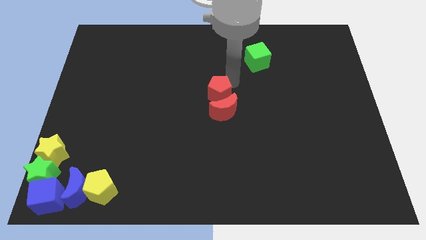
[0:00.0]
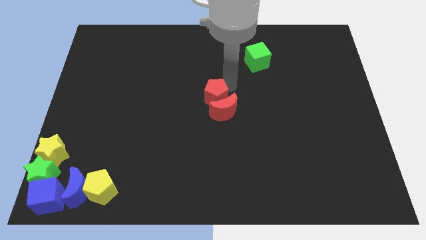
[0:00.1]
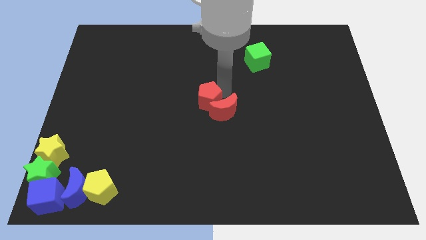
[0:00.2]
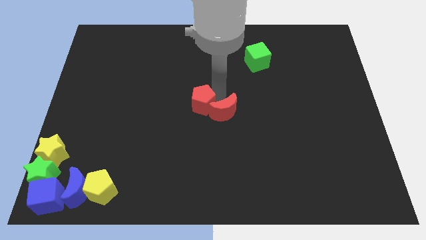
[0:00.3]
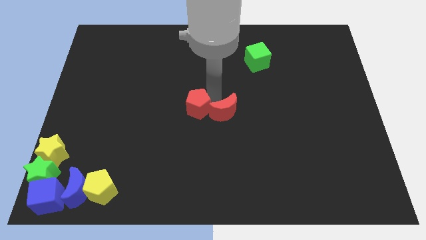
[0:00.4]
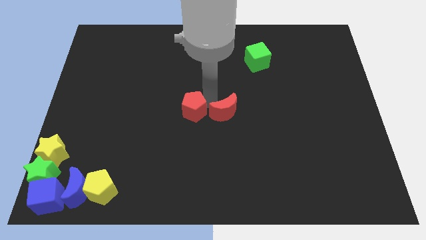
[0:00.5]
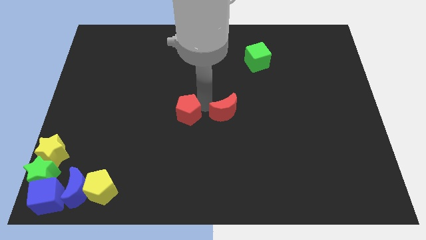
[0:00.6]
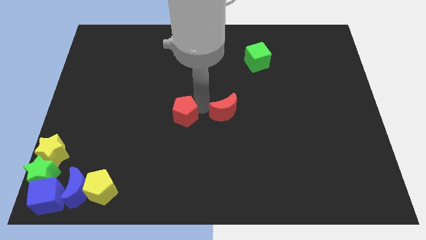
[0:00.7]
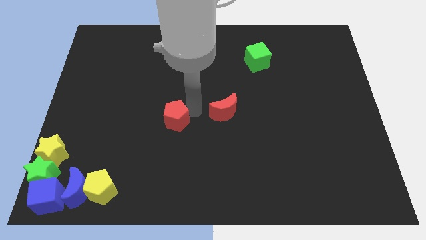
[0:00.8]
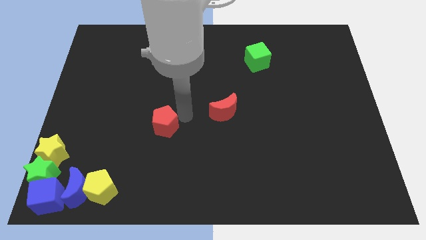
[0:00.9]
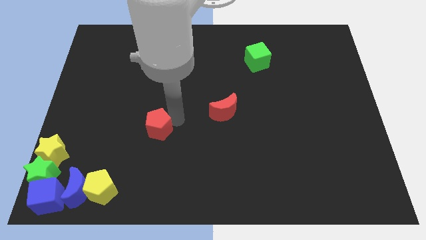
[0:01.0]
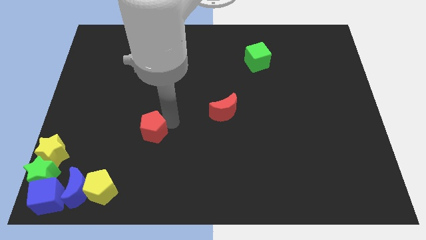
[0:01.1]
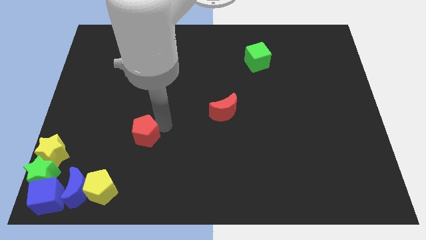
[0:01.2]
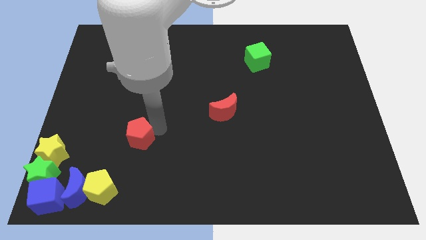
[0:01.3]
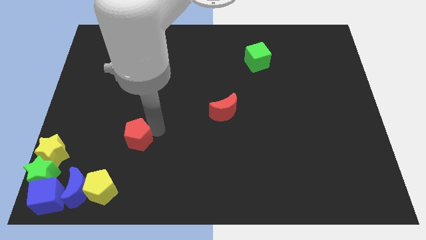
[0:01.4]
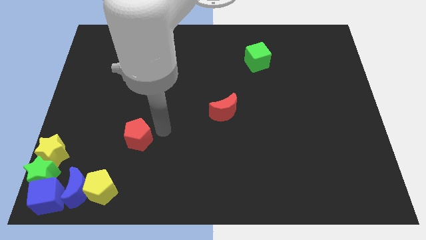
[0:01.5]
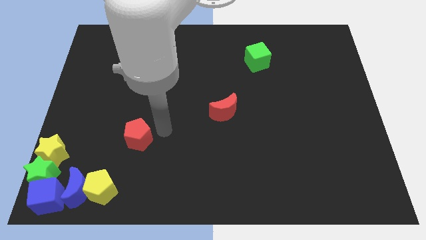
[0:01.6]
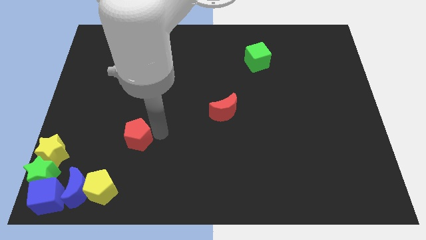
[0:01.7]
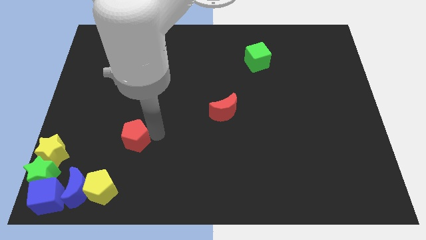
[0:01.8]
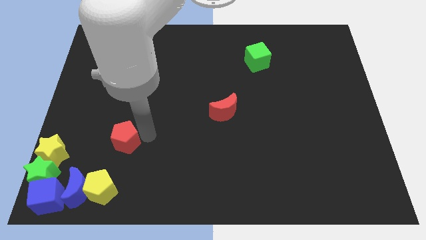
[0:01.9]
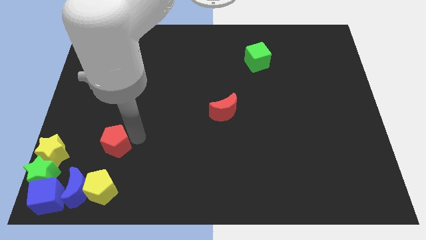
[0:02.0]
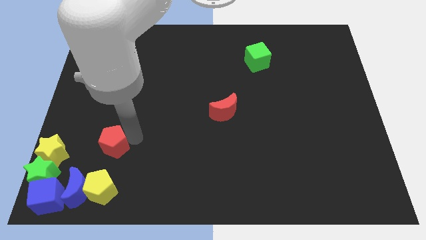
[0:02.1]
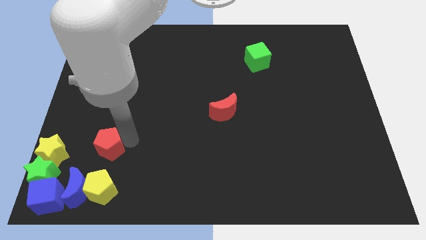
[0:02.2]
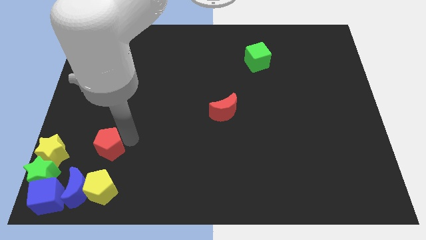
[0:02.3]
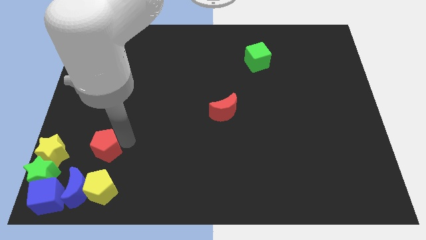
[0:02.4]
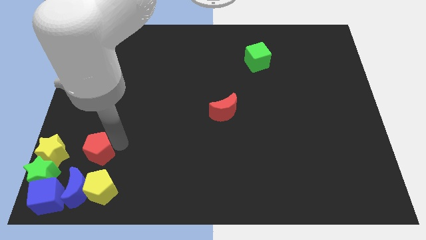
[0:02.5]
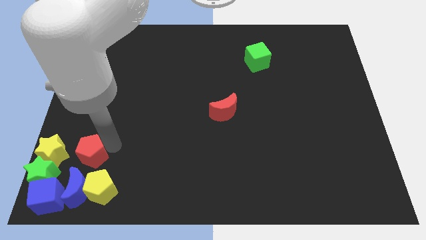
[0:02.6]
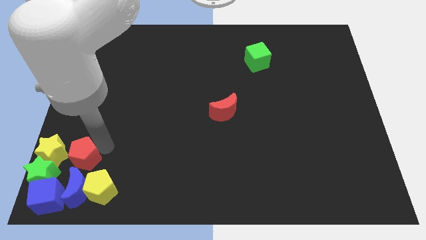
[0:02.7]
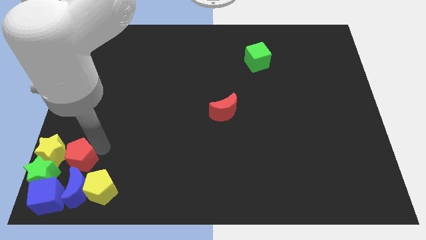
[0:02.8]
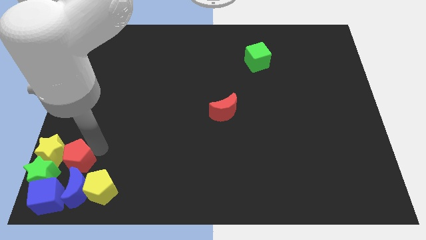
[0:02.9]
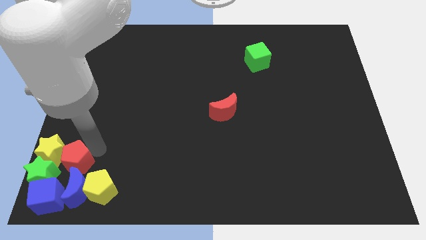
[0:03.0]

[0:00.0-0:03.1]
drag the red pentagon into the right side of the yellow star

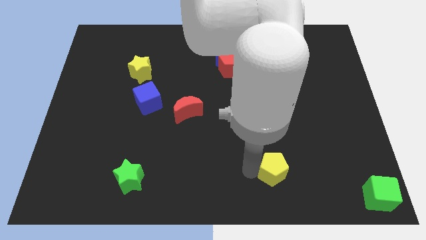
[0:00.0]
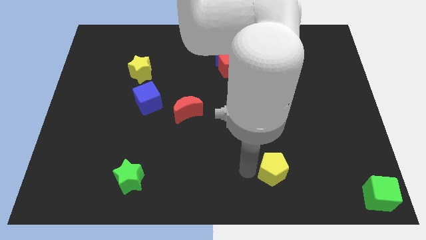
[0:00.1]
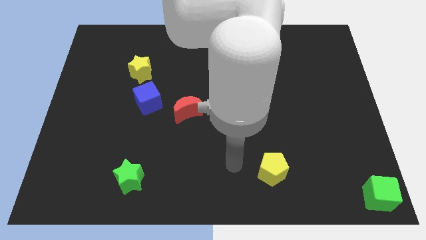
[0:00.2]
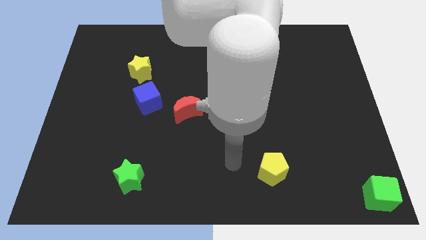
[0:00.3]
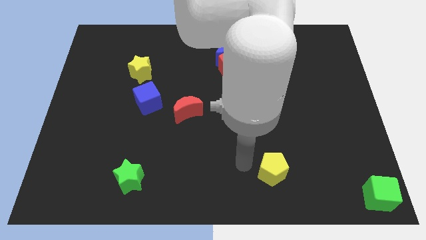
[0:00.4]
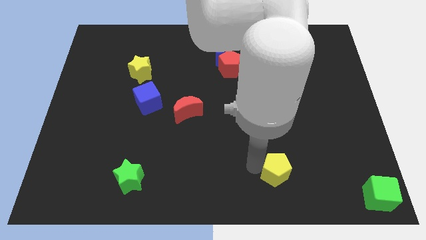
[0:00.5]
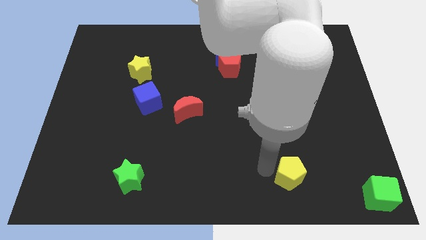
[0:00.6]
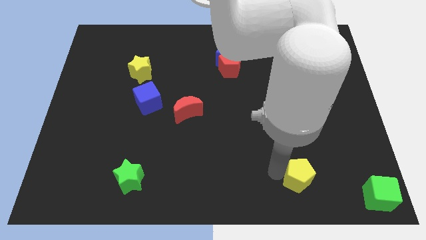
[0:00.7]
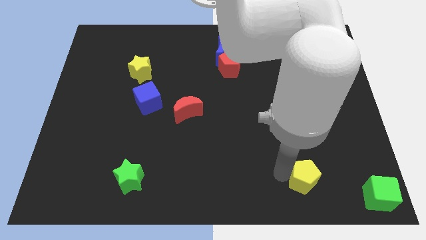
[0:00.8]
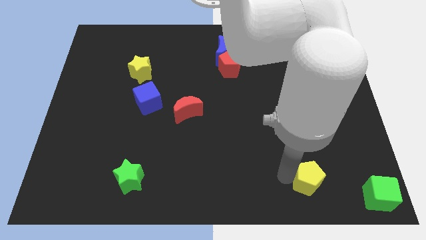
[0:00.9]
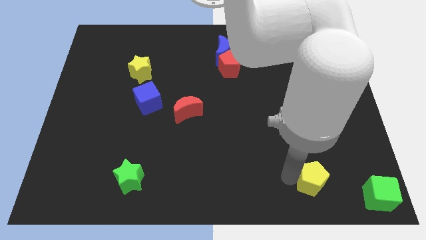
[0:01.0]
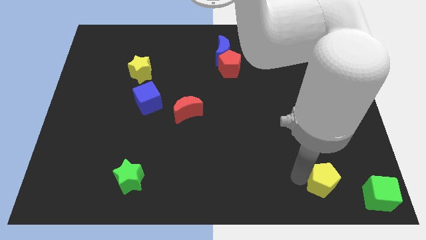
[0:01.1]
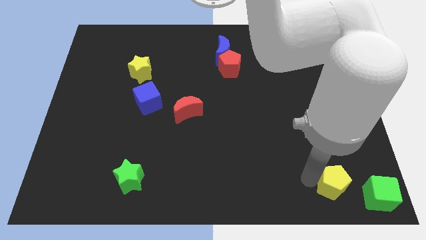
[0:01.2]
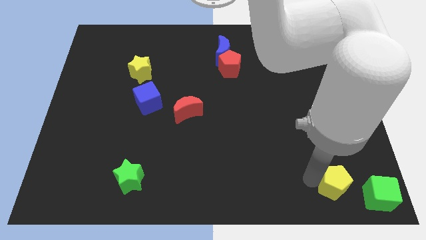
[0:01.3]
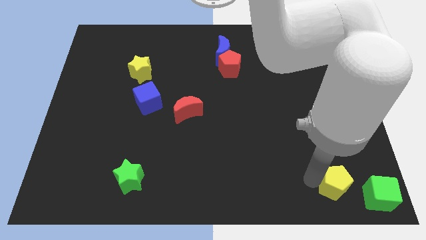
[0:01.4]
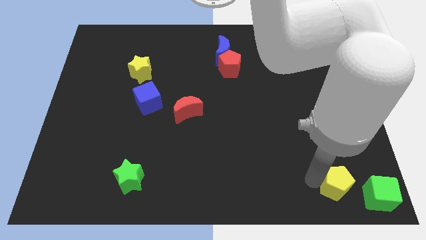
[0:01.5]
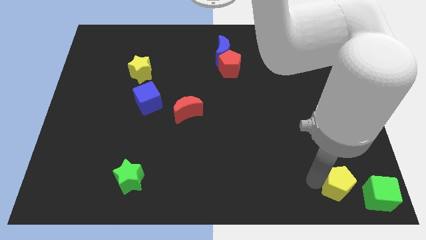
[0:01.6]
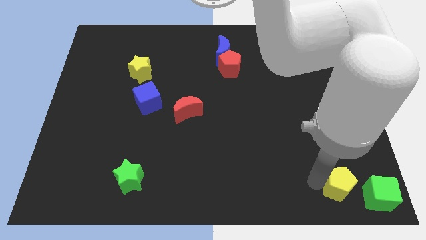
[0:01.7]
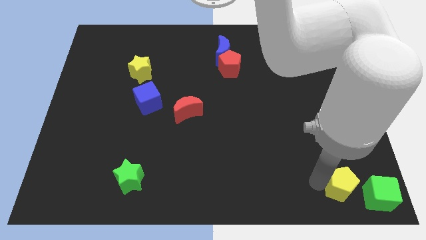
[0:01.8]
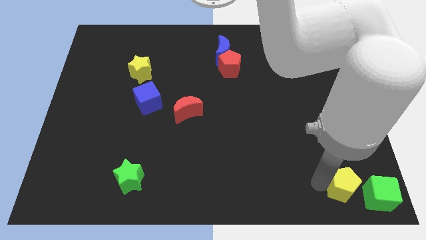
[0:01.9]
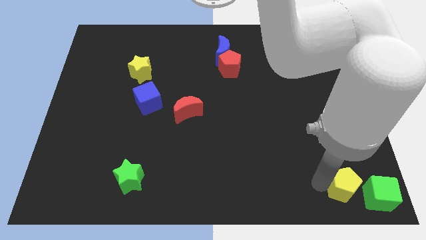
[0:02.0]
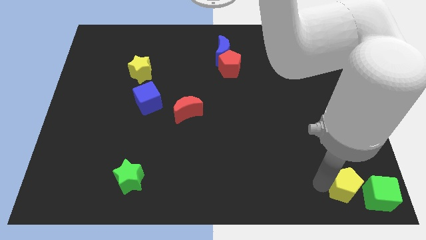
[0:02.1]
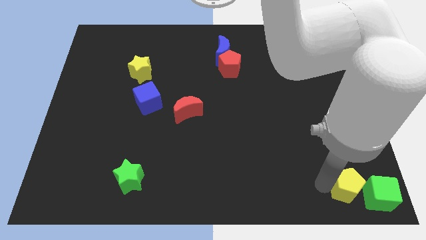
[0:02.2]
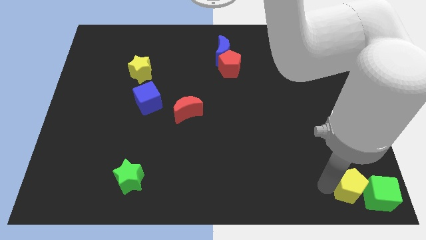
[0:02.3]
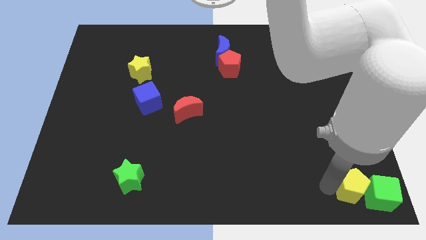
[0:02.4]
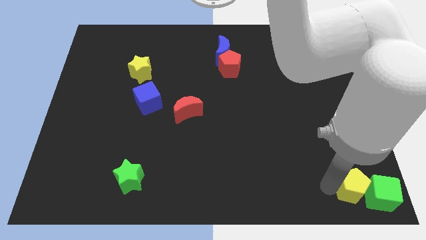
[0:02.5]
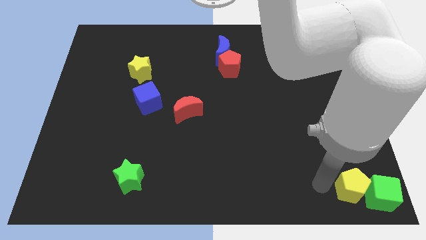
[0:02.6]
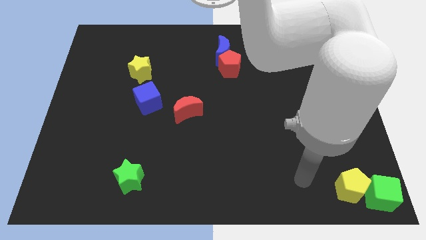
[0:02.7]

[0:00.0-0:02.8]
place yellow pentagon beside green cube

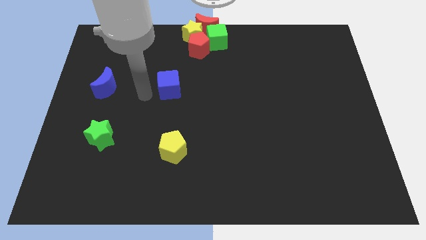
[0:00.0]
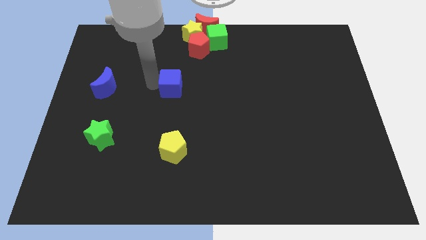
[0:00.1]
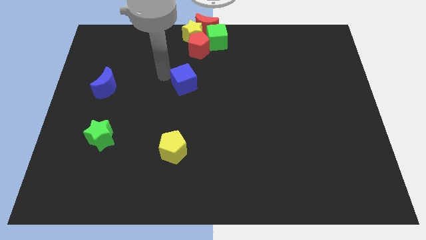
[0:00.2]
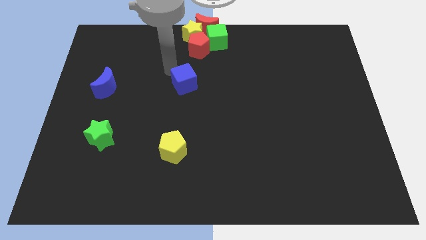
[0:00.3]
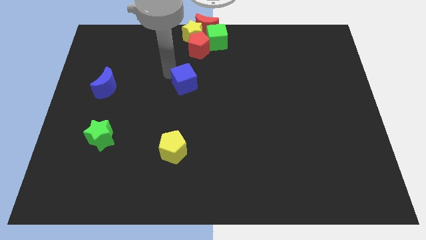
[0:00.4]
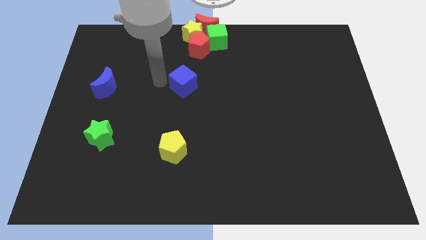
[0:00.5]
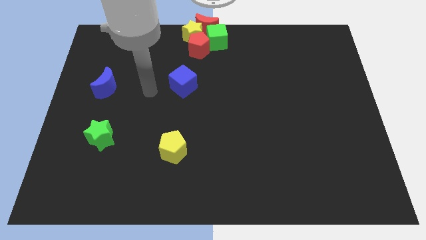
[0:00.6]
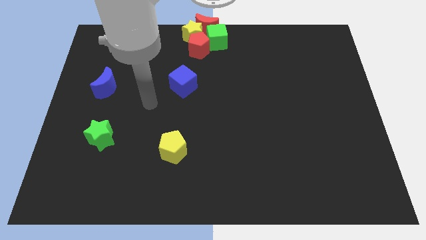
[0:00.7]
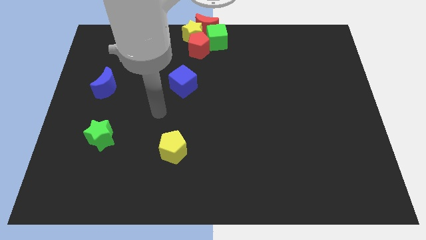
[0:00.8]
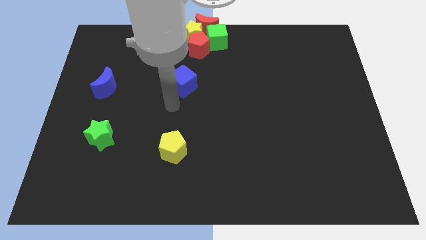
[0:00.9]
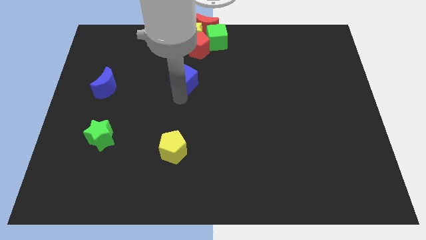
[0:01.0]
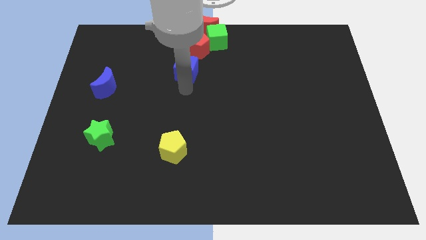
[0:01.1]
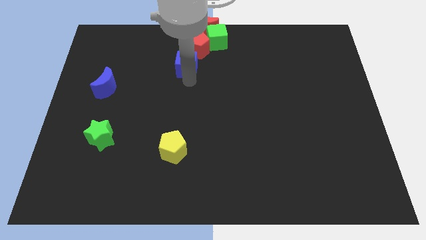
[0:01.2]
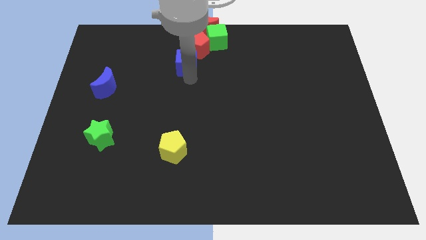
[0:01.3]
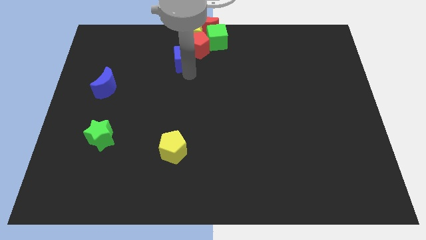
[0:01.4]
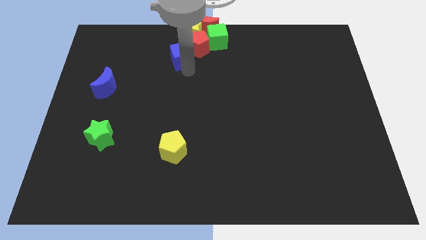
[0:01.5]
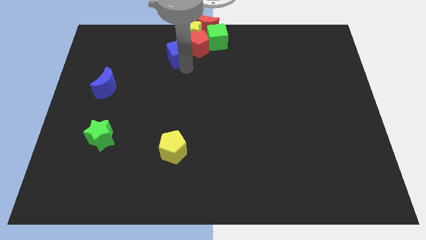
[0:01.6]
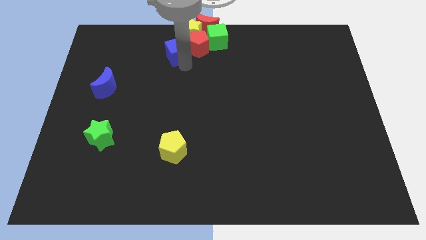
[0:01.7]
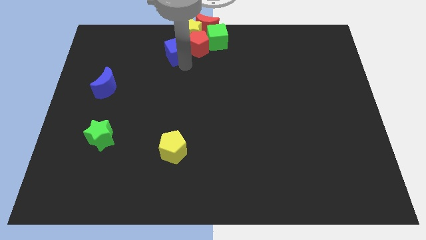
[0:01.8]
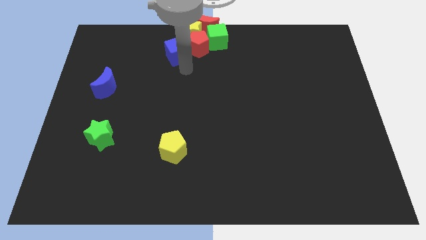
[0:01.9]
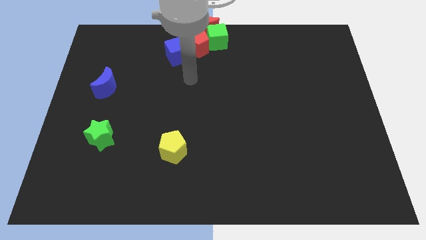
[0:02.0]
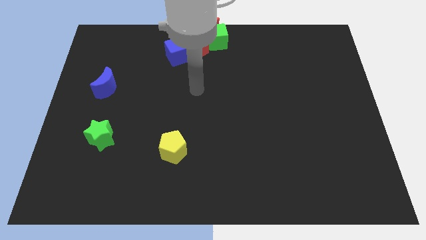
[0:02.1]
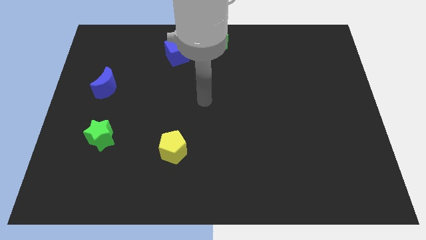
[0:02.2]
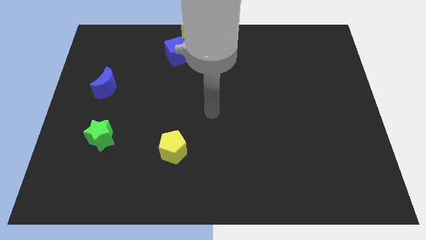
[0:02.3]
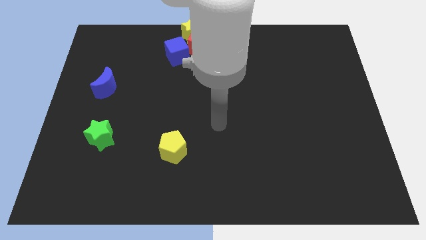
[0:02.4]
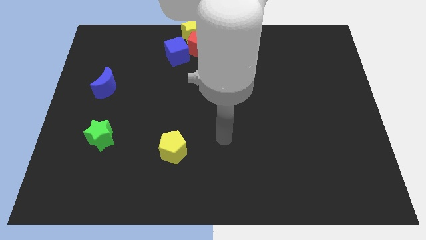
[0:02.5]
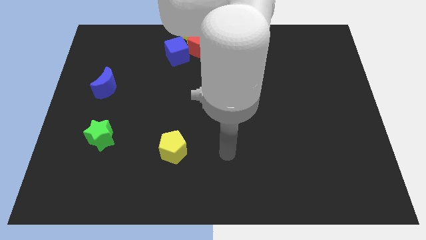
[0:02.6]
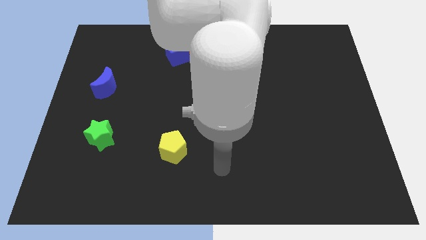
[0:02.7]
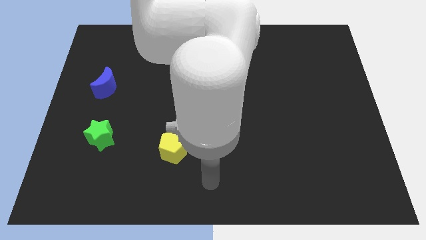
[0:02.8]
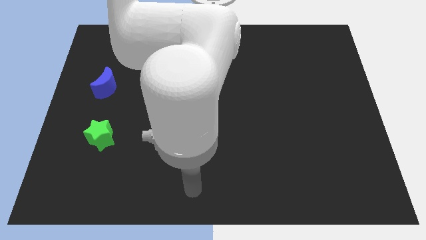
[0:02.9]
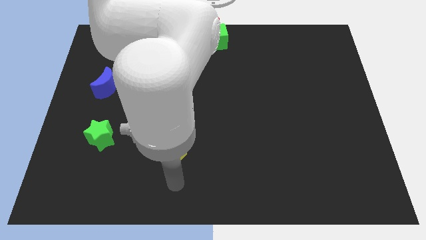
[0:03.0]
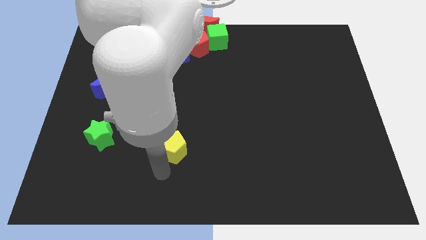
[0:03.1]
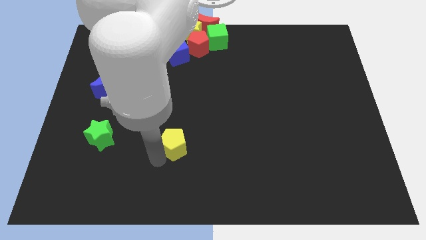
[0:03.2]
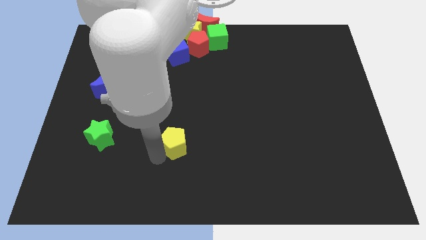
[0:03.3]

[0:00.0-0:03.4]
move blue cube towards the red pentagon
